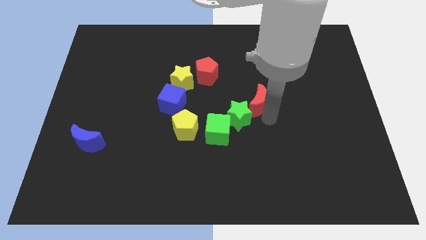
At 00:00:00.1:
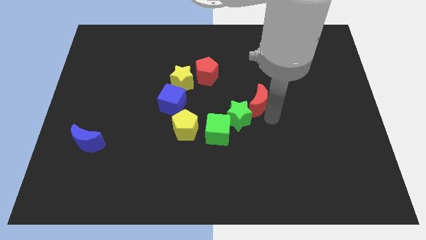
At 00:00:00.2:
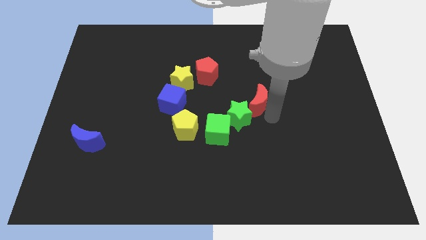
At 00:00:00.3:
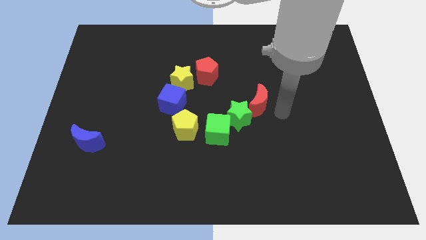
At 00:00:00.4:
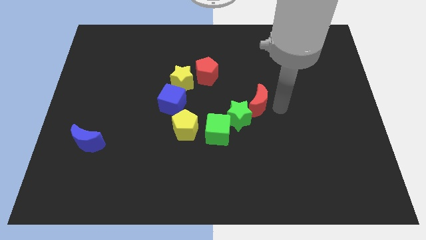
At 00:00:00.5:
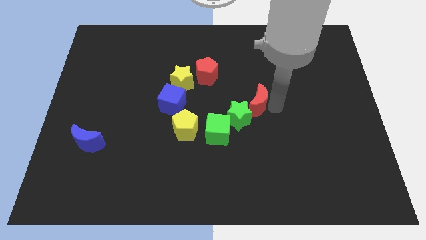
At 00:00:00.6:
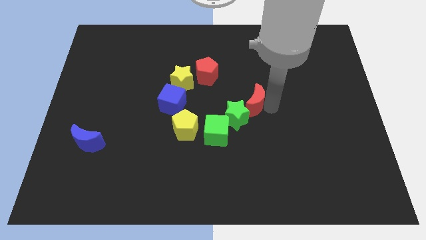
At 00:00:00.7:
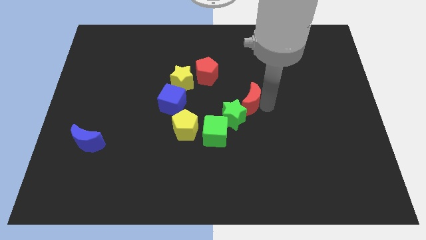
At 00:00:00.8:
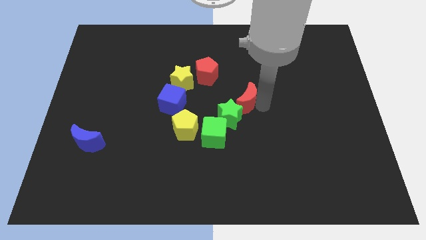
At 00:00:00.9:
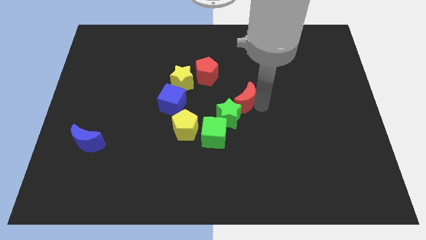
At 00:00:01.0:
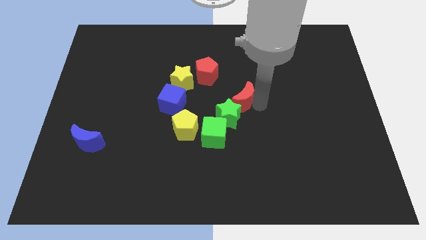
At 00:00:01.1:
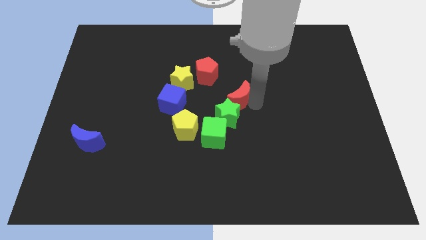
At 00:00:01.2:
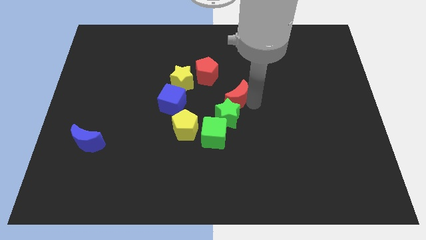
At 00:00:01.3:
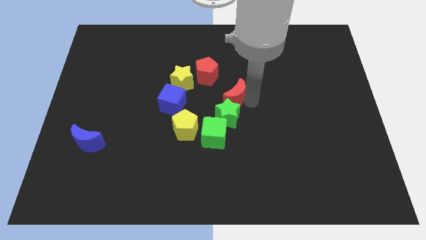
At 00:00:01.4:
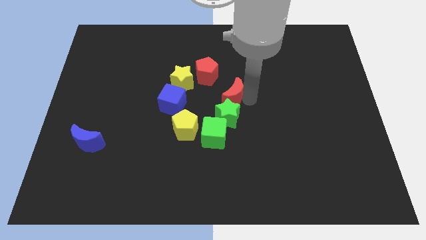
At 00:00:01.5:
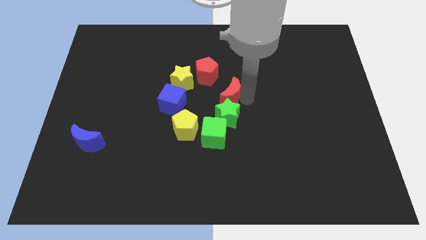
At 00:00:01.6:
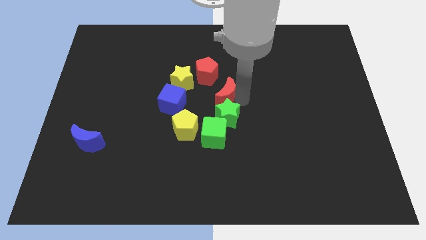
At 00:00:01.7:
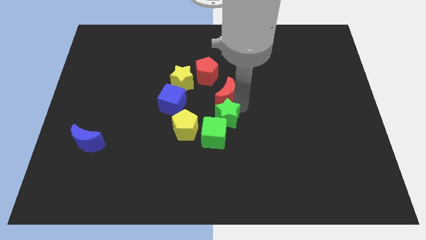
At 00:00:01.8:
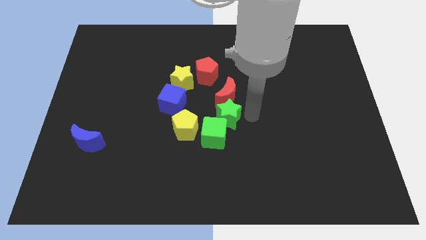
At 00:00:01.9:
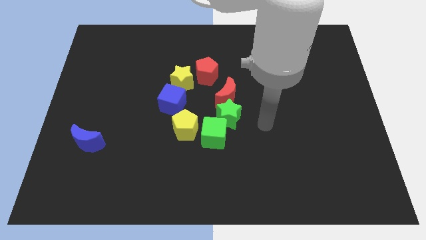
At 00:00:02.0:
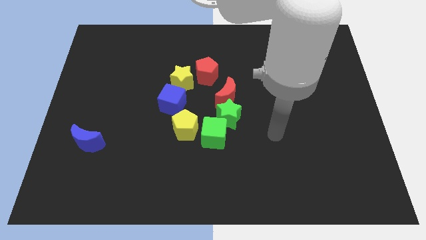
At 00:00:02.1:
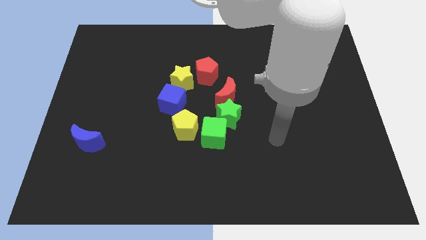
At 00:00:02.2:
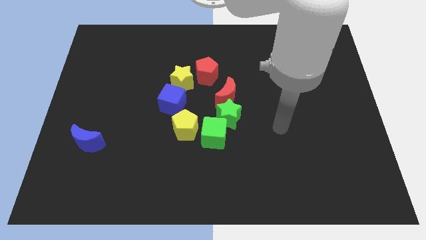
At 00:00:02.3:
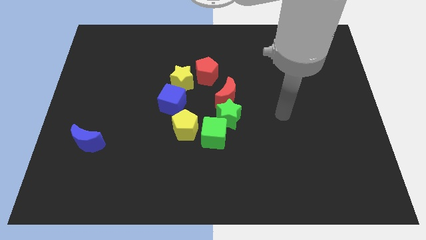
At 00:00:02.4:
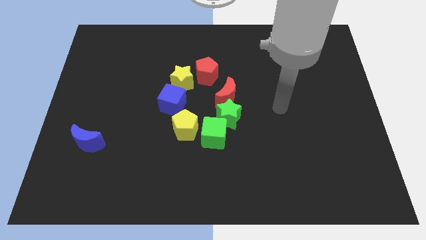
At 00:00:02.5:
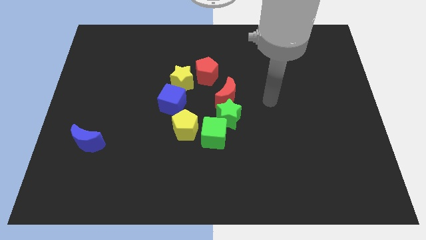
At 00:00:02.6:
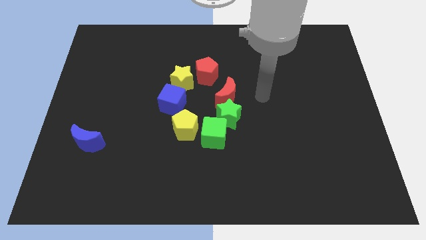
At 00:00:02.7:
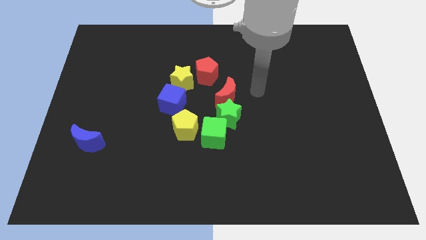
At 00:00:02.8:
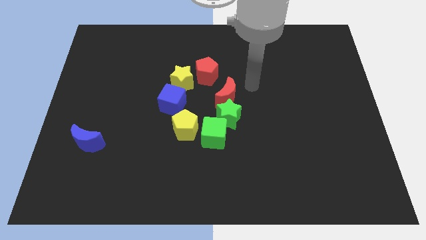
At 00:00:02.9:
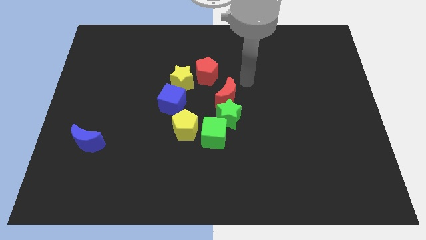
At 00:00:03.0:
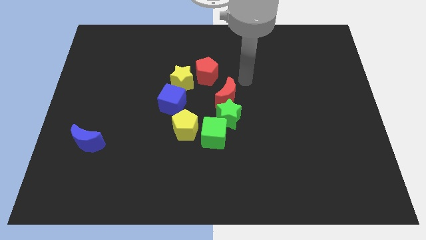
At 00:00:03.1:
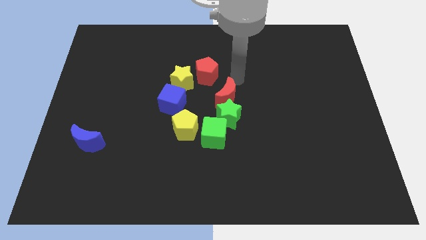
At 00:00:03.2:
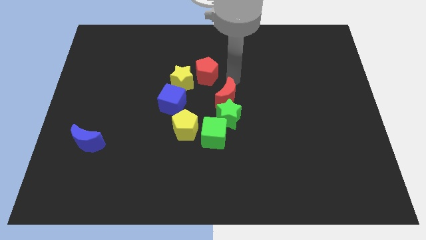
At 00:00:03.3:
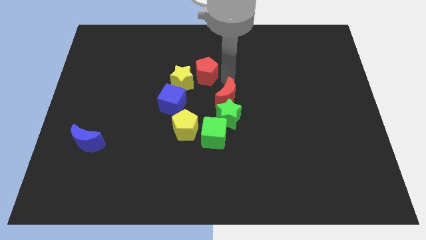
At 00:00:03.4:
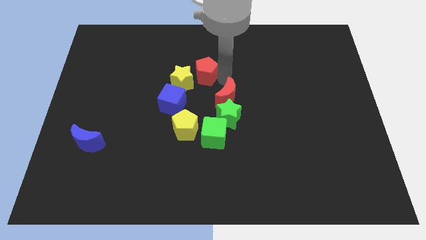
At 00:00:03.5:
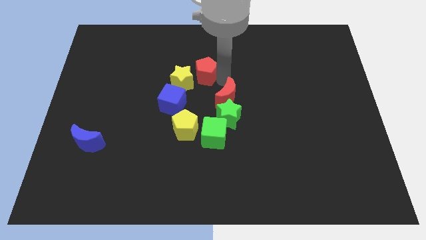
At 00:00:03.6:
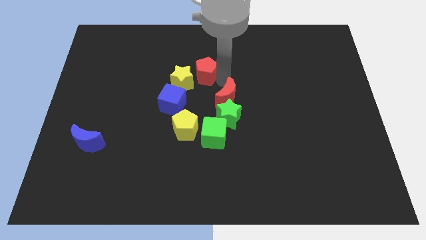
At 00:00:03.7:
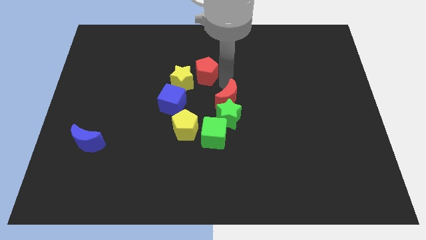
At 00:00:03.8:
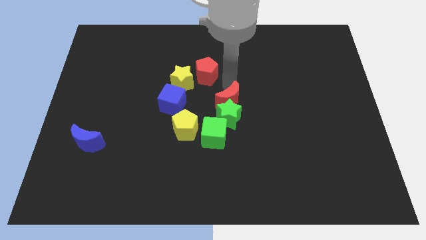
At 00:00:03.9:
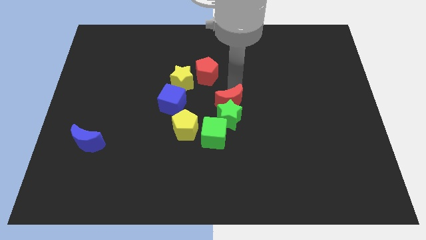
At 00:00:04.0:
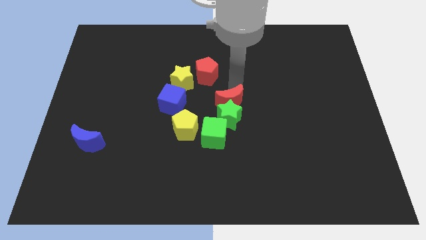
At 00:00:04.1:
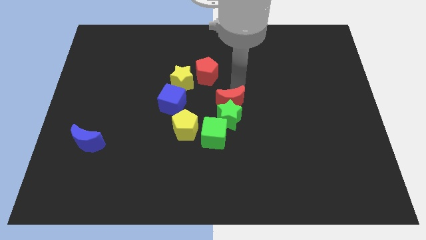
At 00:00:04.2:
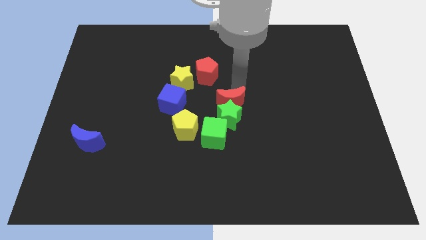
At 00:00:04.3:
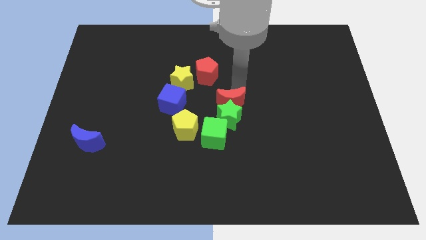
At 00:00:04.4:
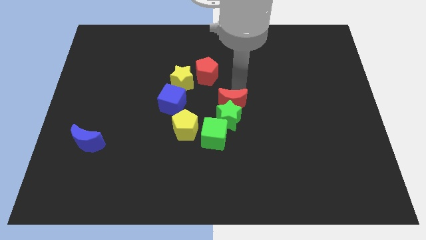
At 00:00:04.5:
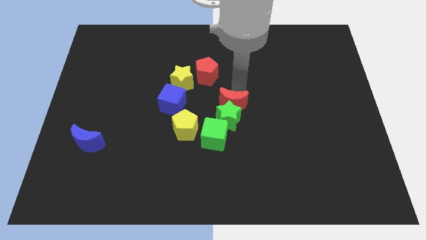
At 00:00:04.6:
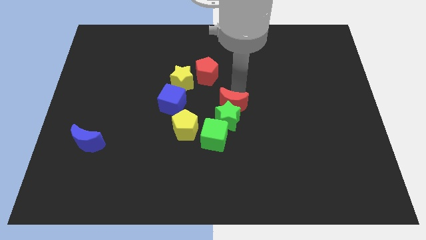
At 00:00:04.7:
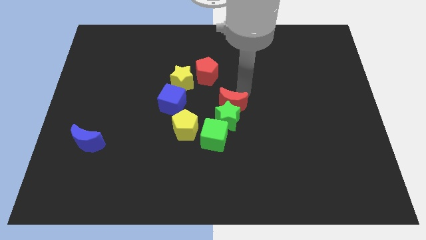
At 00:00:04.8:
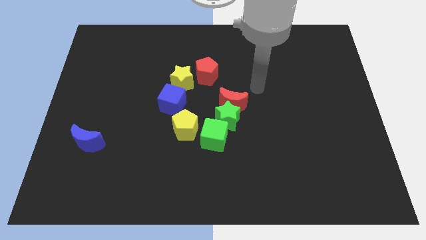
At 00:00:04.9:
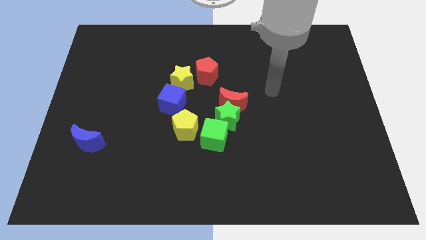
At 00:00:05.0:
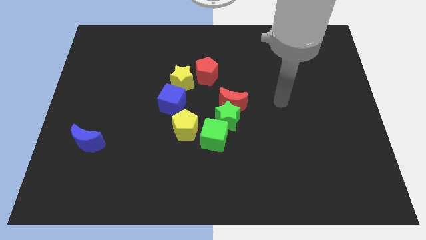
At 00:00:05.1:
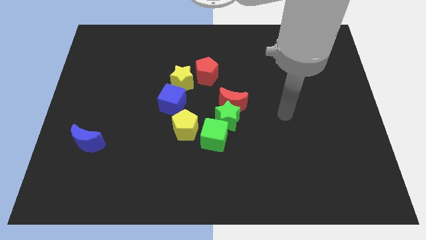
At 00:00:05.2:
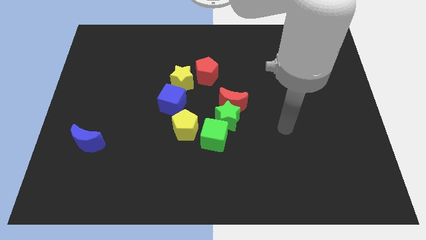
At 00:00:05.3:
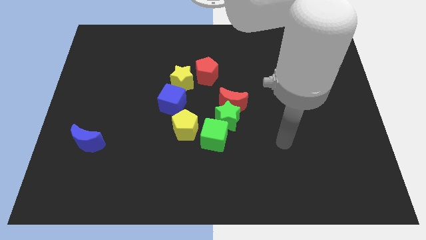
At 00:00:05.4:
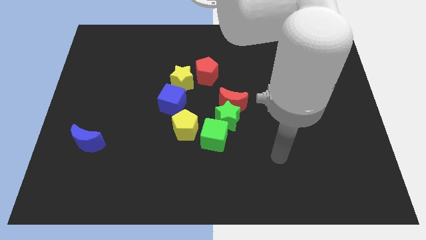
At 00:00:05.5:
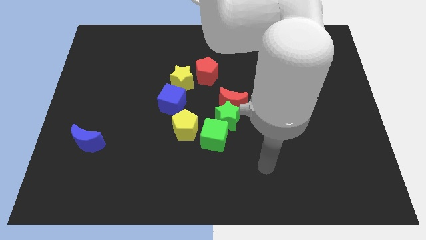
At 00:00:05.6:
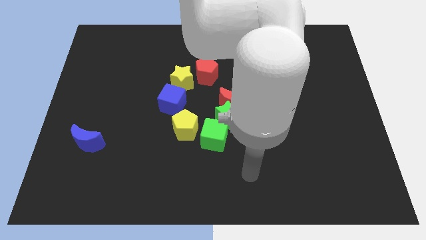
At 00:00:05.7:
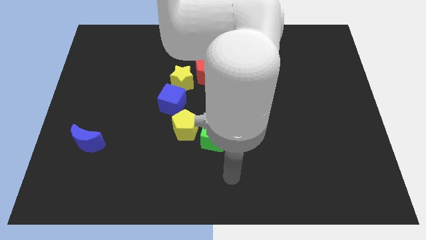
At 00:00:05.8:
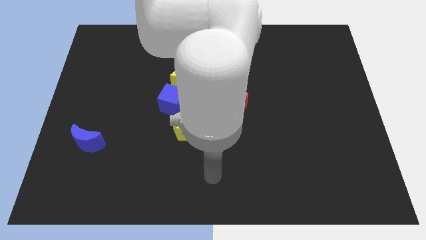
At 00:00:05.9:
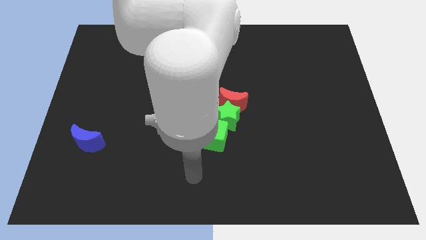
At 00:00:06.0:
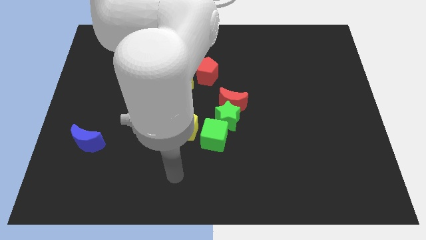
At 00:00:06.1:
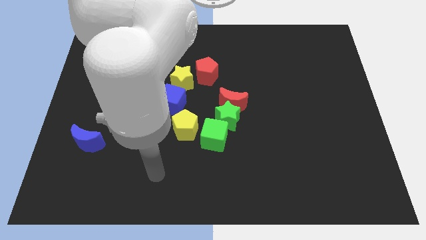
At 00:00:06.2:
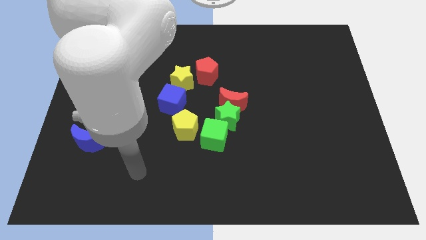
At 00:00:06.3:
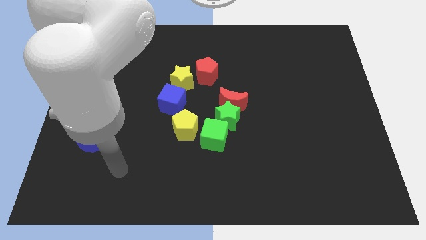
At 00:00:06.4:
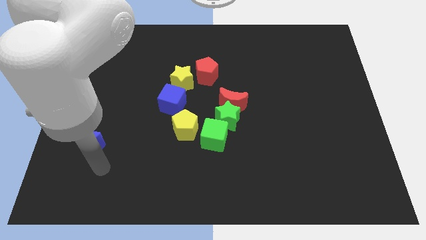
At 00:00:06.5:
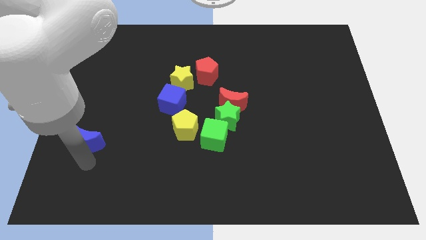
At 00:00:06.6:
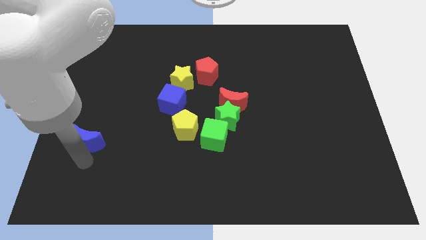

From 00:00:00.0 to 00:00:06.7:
move your arm away from the red moon

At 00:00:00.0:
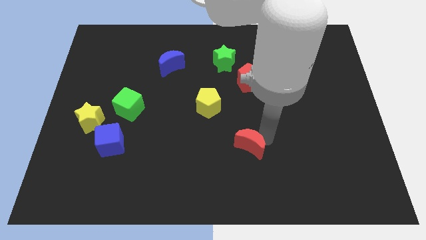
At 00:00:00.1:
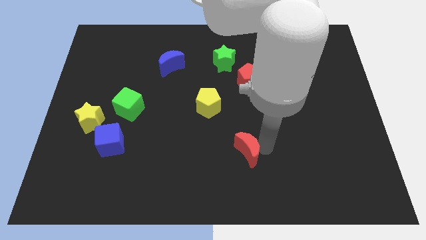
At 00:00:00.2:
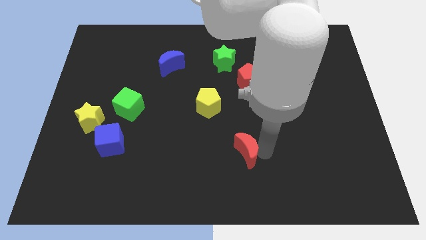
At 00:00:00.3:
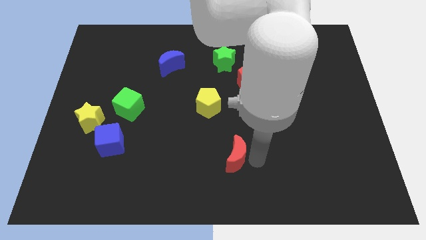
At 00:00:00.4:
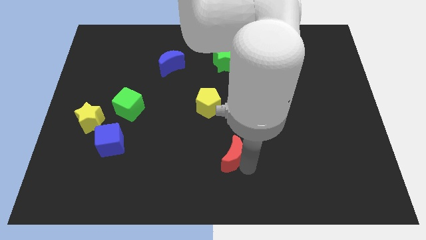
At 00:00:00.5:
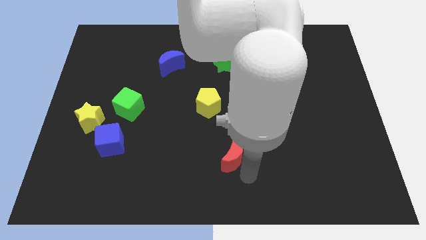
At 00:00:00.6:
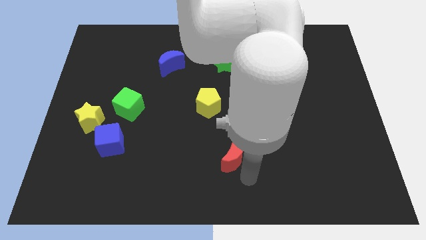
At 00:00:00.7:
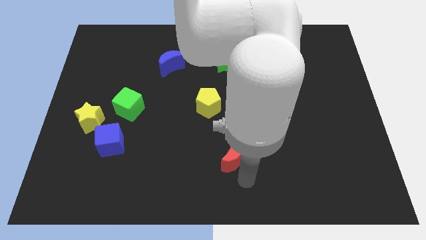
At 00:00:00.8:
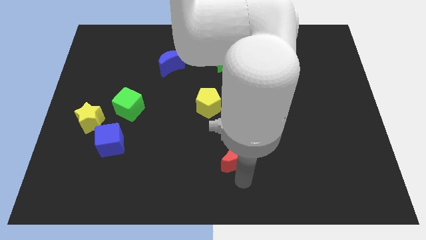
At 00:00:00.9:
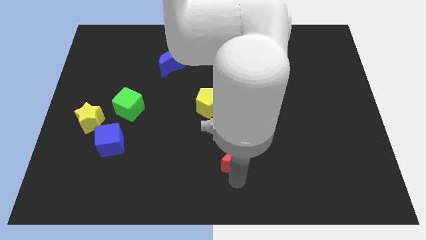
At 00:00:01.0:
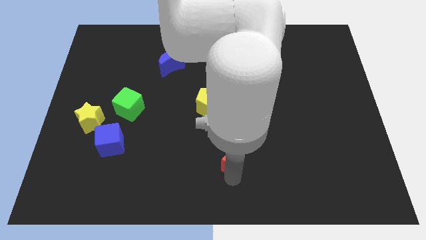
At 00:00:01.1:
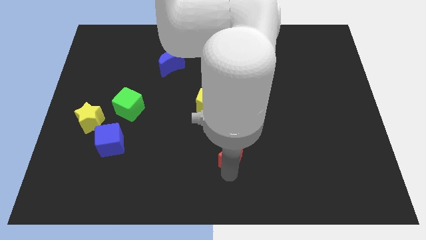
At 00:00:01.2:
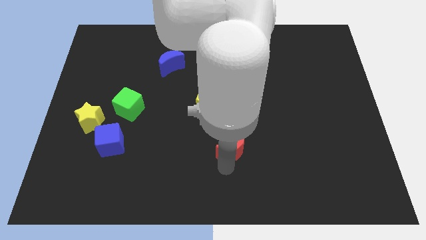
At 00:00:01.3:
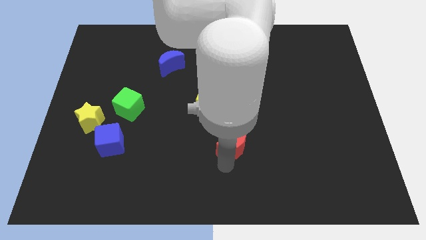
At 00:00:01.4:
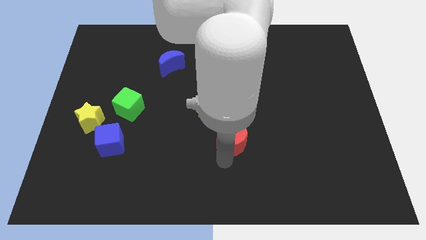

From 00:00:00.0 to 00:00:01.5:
move the red crescent slightly to top

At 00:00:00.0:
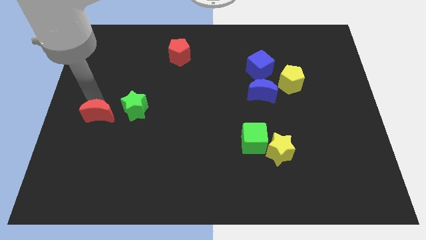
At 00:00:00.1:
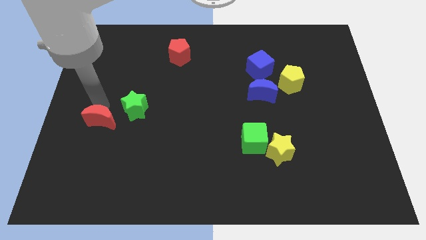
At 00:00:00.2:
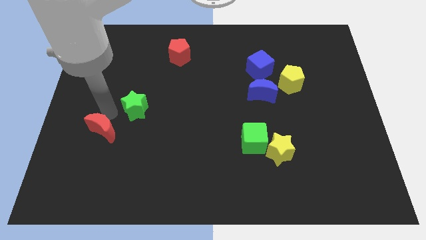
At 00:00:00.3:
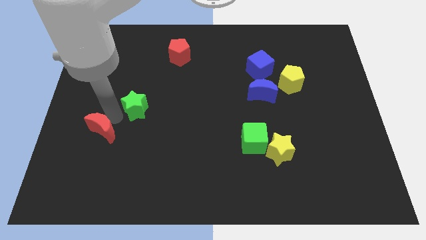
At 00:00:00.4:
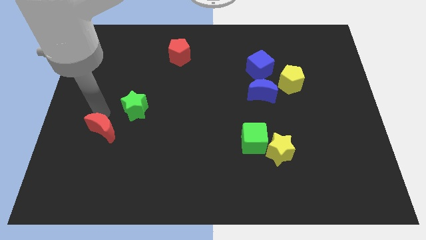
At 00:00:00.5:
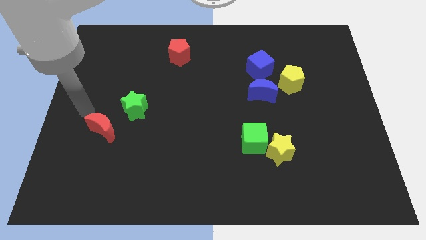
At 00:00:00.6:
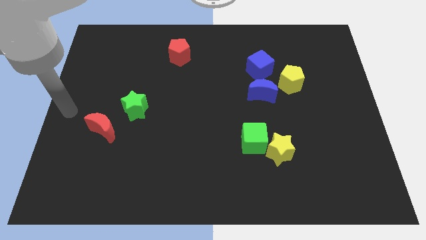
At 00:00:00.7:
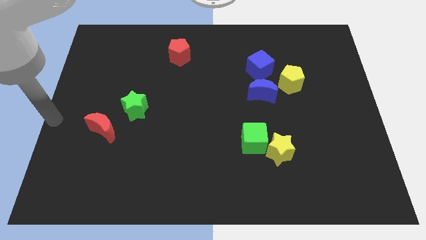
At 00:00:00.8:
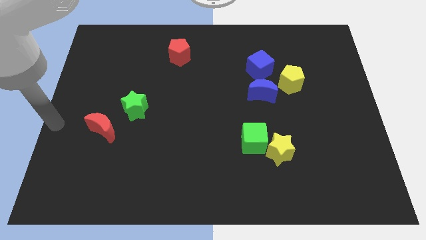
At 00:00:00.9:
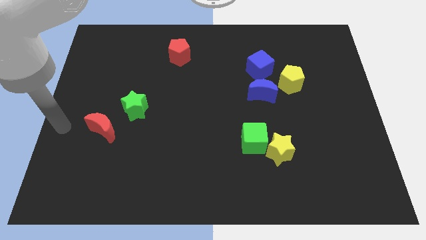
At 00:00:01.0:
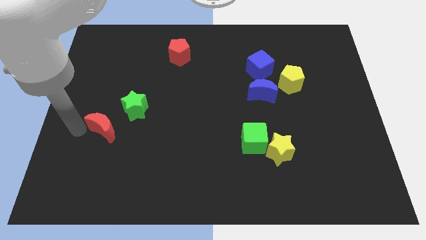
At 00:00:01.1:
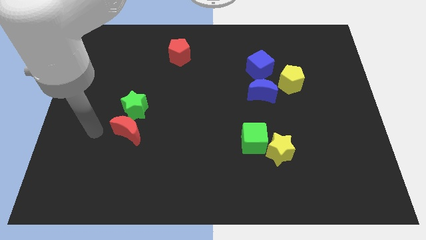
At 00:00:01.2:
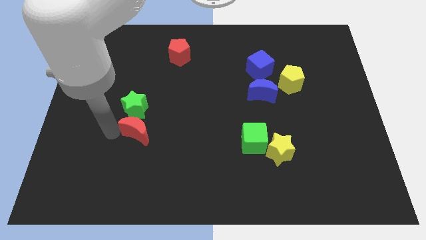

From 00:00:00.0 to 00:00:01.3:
move the red crescent below the green star
